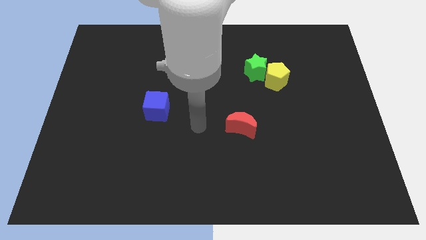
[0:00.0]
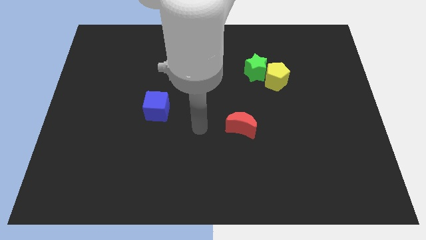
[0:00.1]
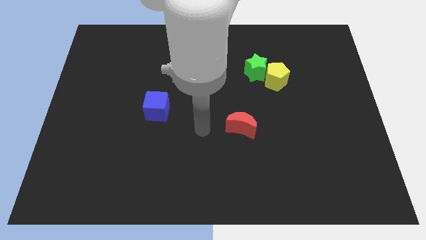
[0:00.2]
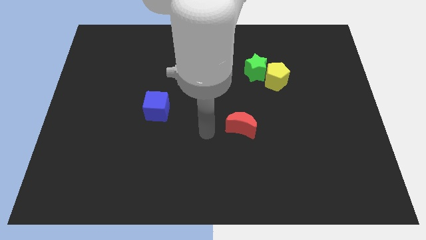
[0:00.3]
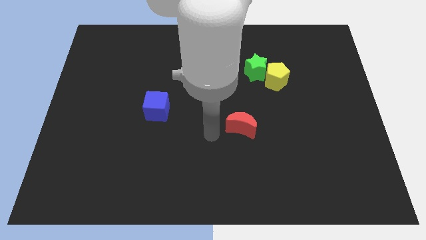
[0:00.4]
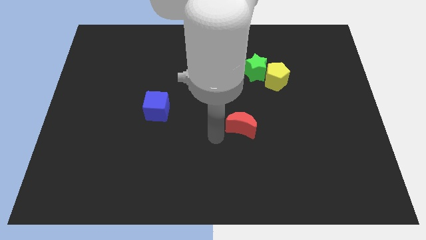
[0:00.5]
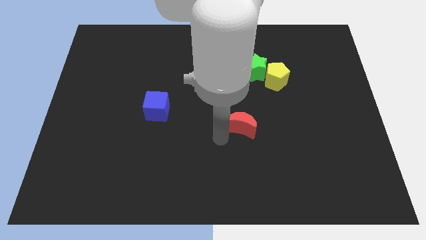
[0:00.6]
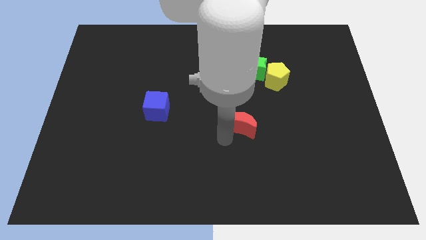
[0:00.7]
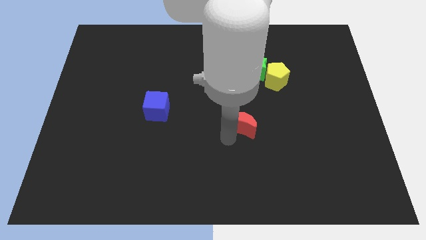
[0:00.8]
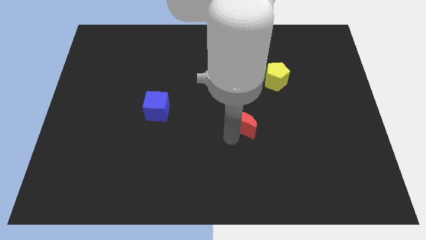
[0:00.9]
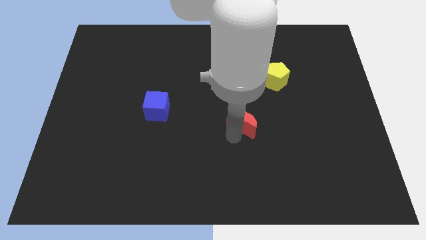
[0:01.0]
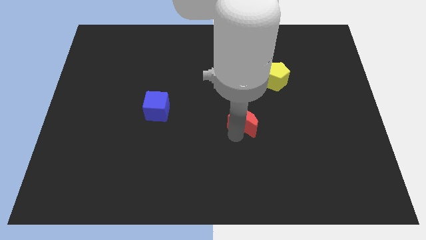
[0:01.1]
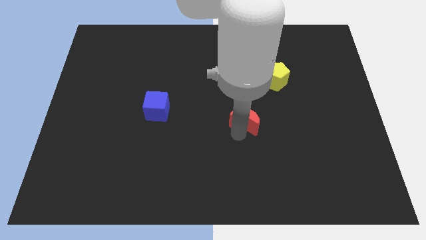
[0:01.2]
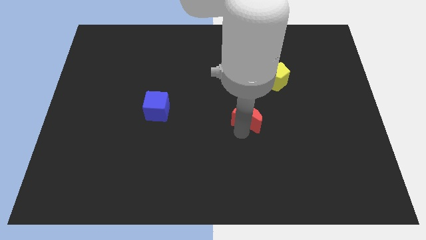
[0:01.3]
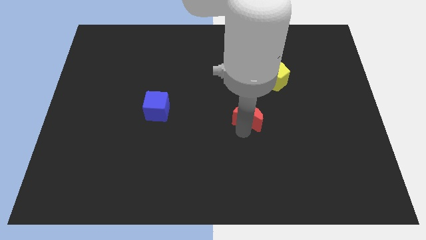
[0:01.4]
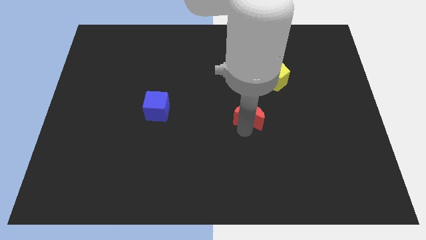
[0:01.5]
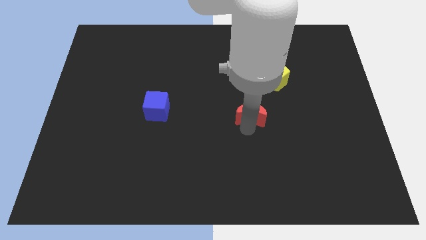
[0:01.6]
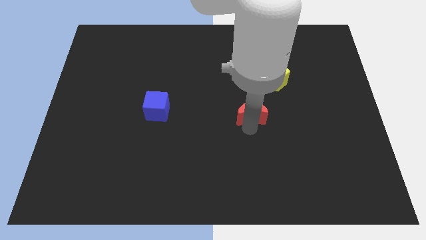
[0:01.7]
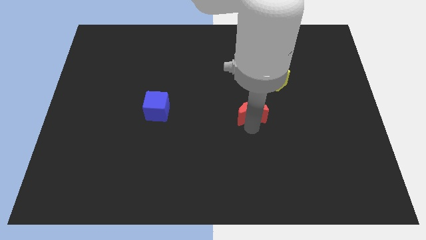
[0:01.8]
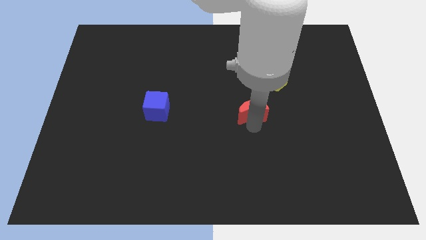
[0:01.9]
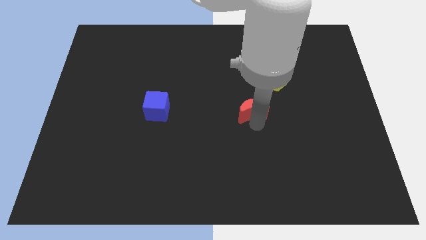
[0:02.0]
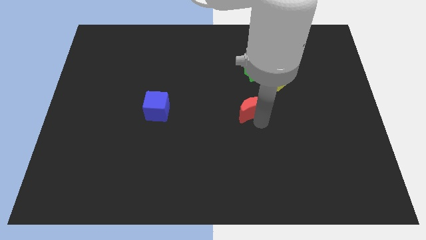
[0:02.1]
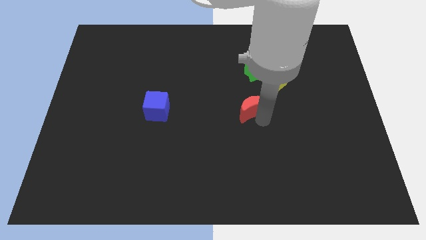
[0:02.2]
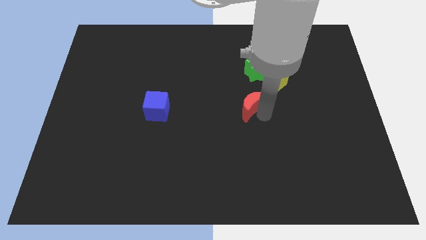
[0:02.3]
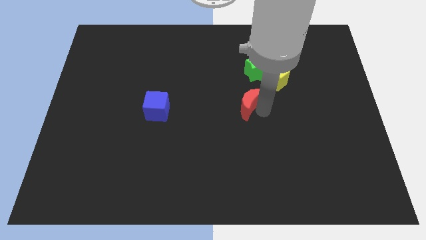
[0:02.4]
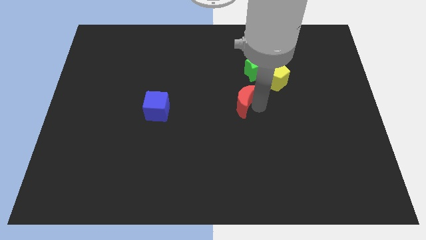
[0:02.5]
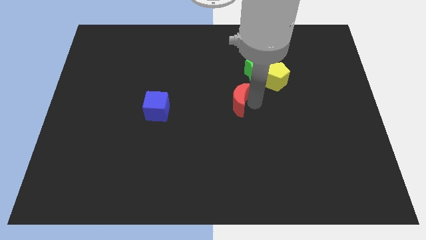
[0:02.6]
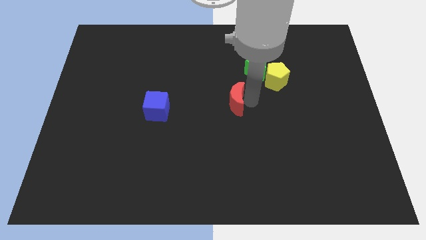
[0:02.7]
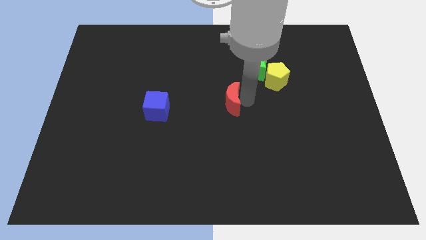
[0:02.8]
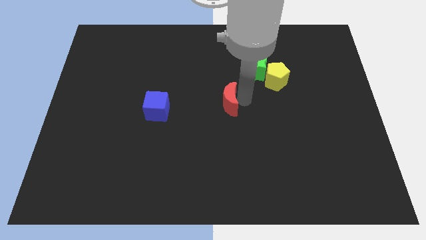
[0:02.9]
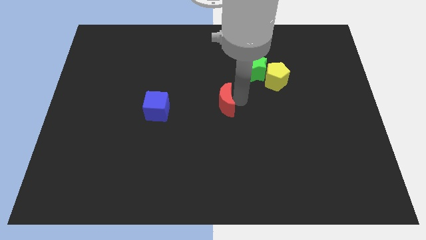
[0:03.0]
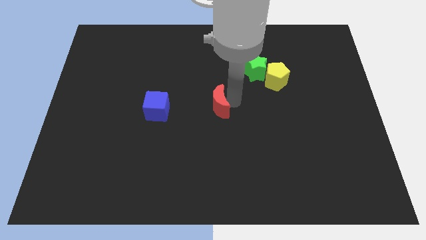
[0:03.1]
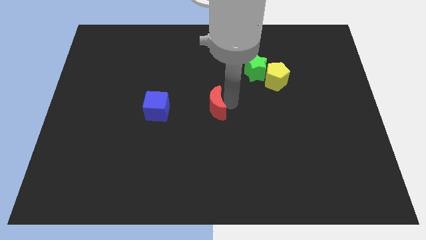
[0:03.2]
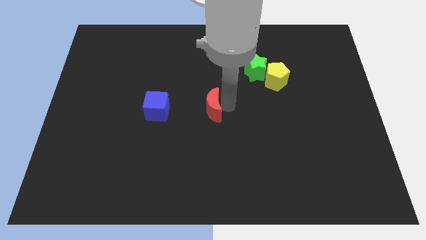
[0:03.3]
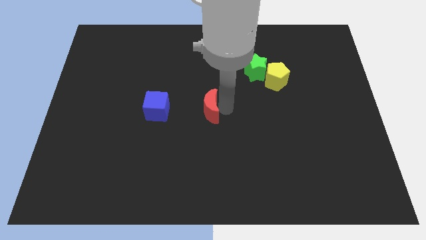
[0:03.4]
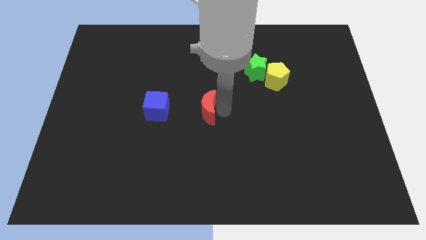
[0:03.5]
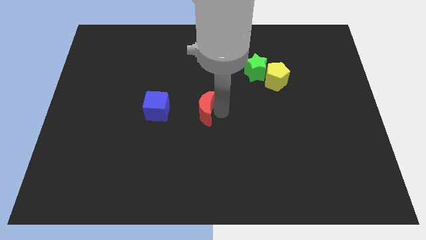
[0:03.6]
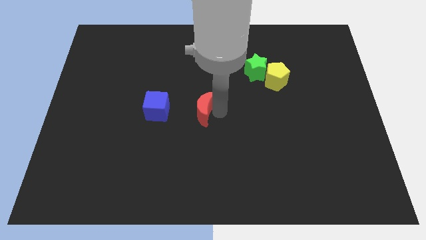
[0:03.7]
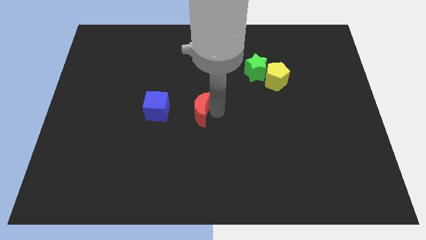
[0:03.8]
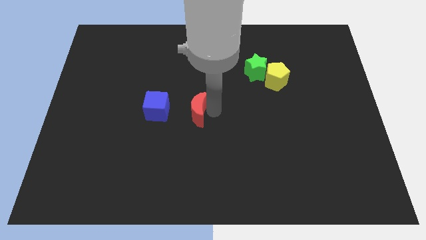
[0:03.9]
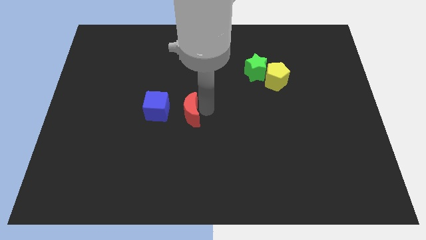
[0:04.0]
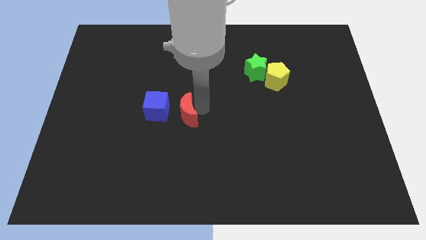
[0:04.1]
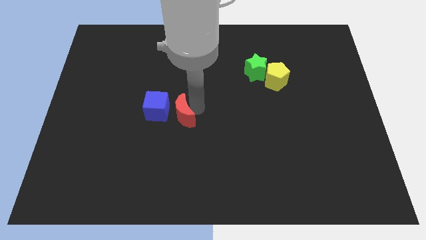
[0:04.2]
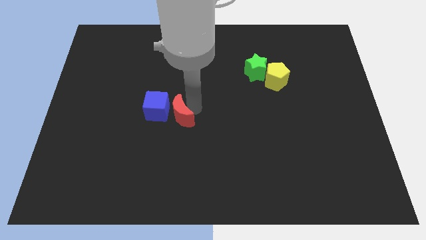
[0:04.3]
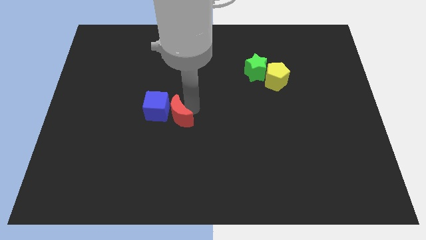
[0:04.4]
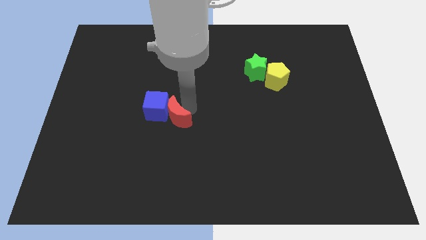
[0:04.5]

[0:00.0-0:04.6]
slide the moon close to the blue block

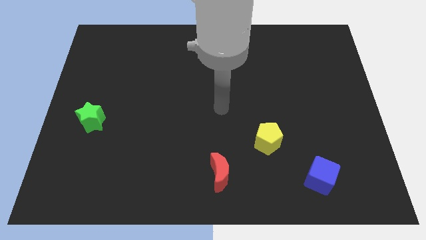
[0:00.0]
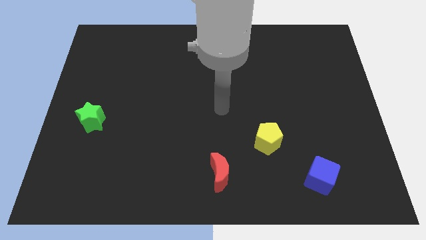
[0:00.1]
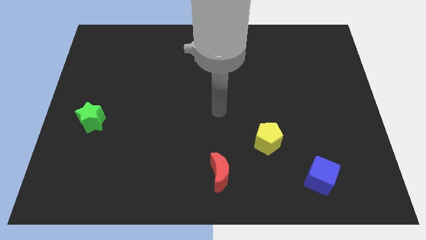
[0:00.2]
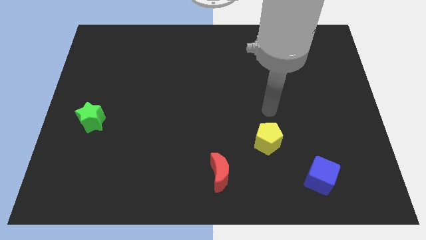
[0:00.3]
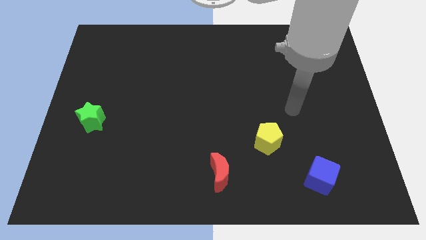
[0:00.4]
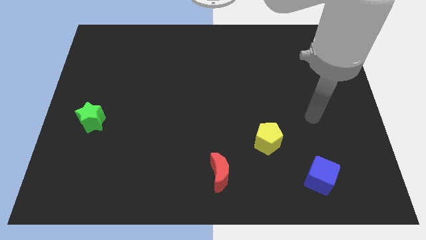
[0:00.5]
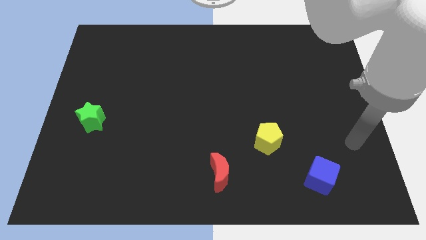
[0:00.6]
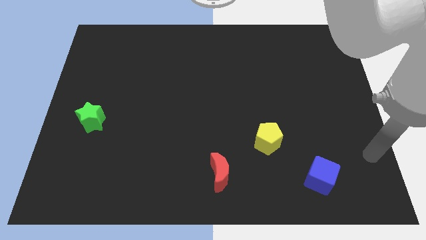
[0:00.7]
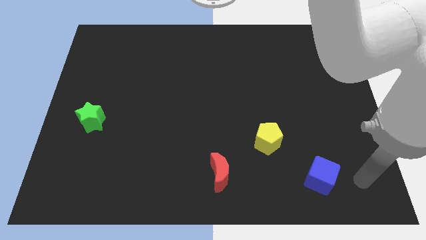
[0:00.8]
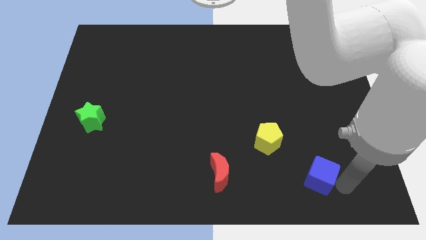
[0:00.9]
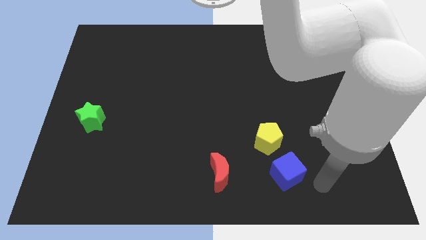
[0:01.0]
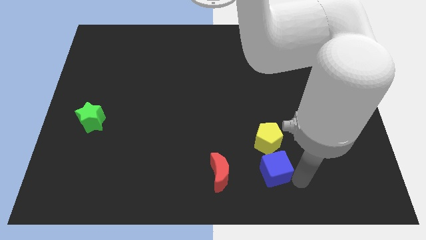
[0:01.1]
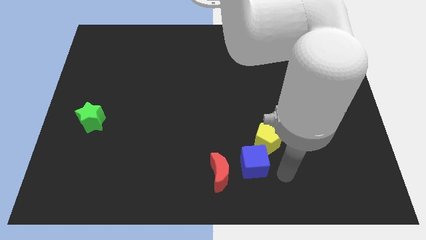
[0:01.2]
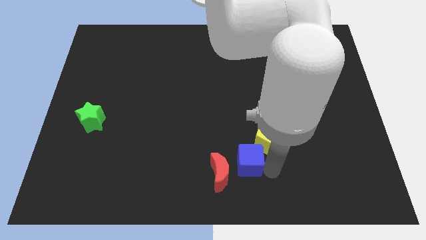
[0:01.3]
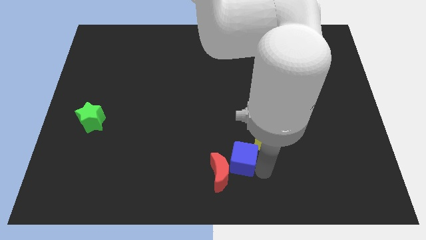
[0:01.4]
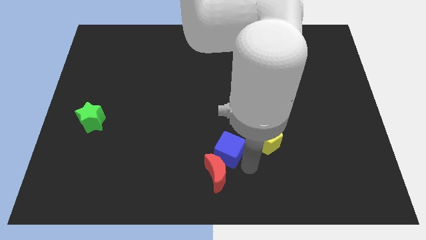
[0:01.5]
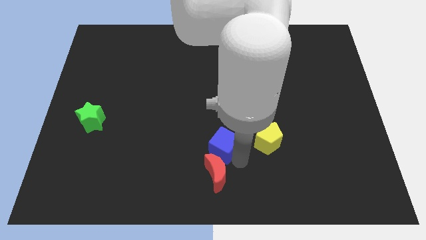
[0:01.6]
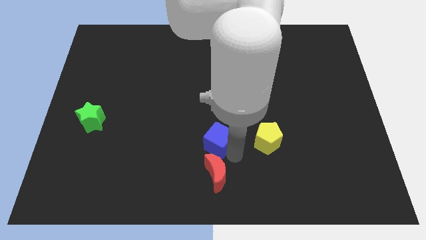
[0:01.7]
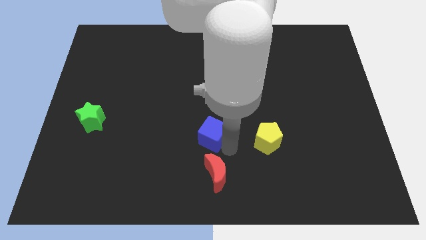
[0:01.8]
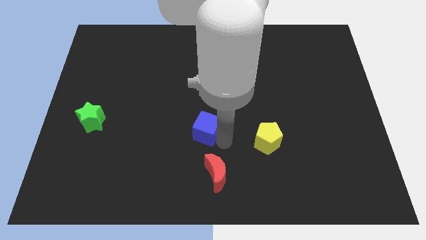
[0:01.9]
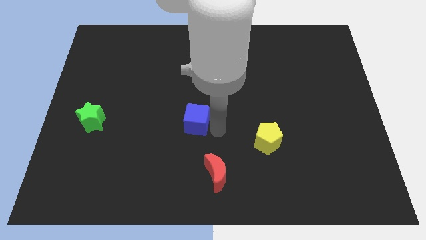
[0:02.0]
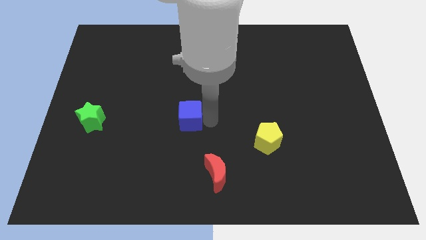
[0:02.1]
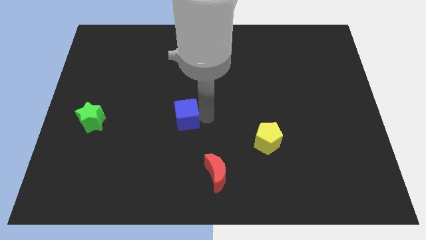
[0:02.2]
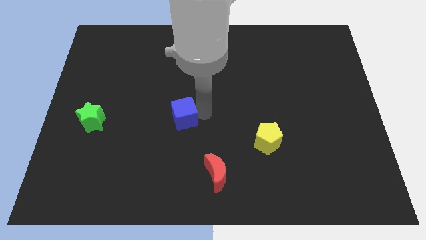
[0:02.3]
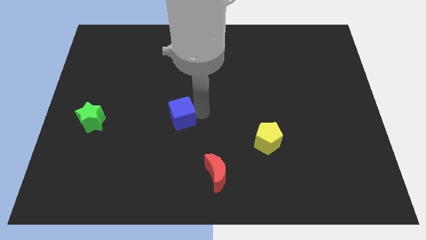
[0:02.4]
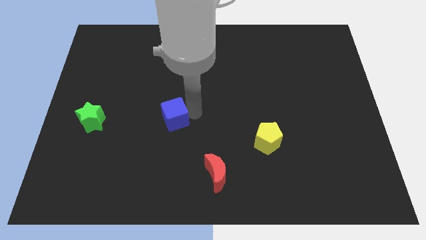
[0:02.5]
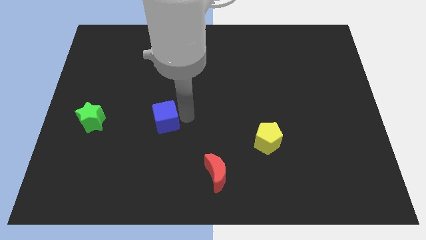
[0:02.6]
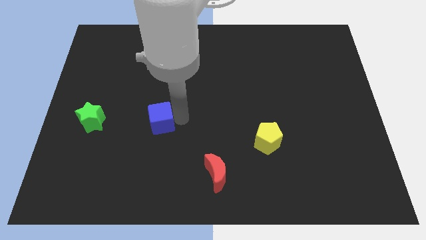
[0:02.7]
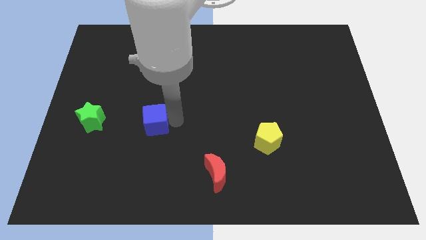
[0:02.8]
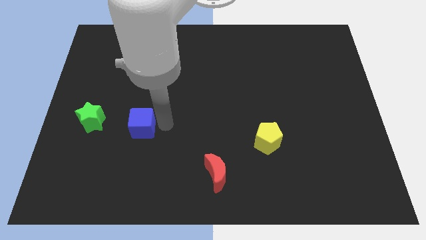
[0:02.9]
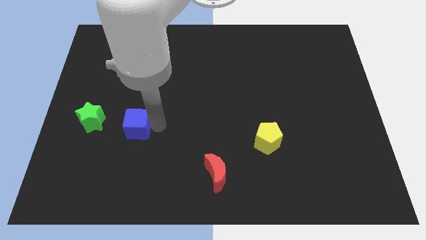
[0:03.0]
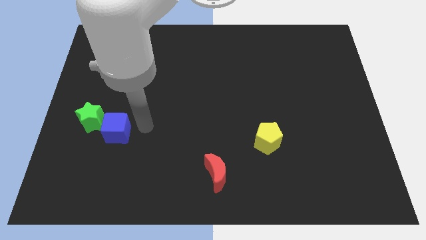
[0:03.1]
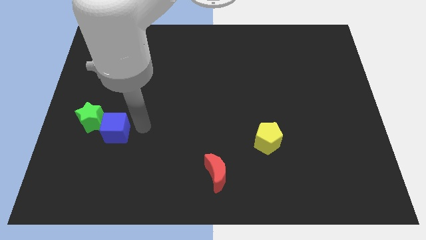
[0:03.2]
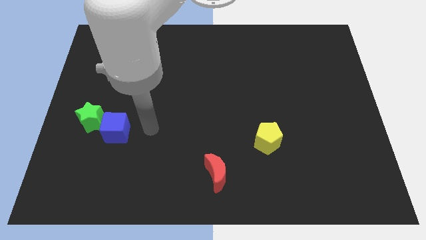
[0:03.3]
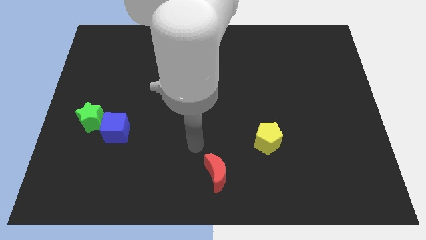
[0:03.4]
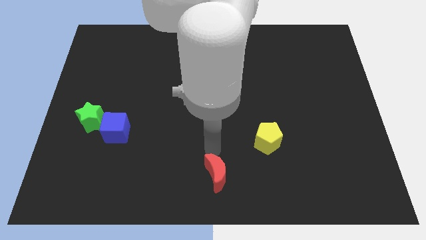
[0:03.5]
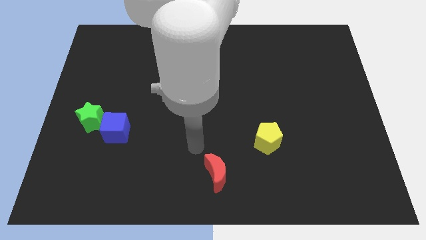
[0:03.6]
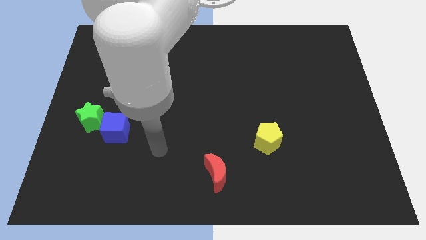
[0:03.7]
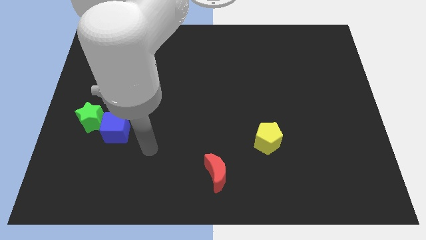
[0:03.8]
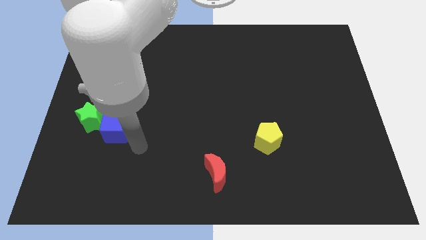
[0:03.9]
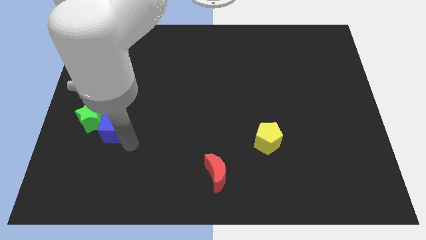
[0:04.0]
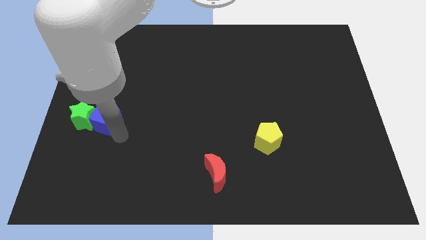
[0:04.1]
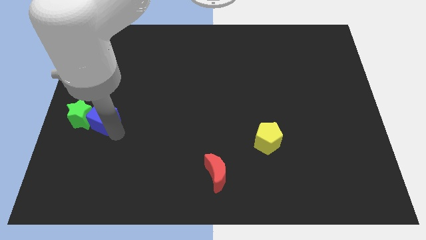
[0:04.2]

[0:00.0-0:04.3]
slide the blue block close to the green star
